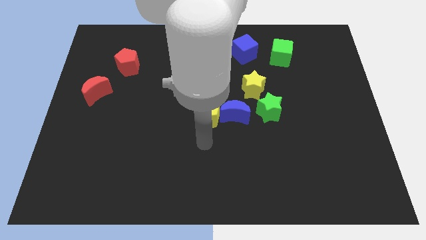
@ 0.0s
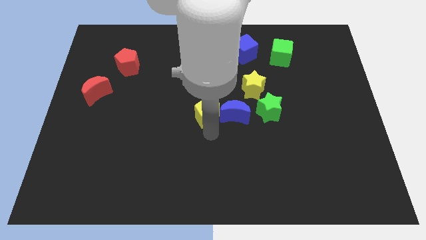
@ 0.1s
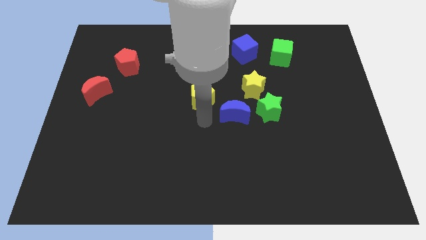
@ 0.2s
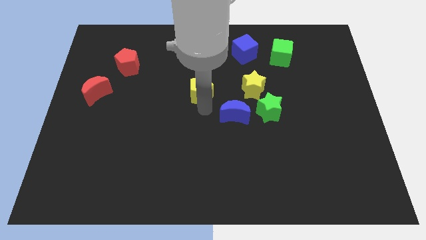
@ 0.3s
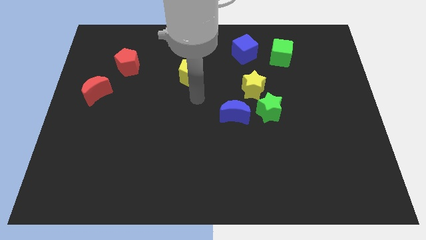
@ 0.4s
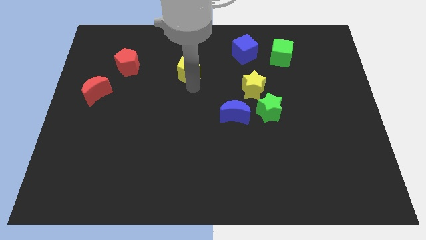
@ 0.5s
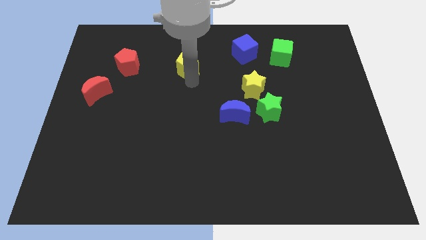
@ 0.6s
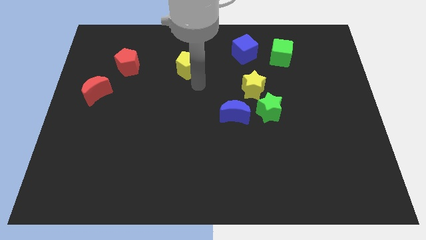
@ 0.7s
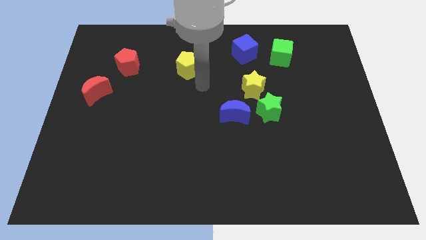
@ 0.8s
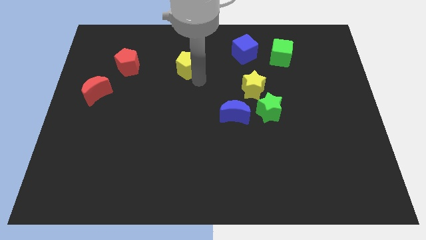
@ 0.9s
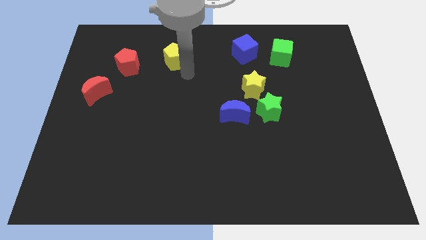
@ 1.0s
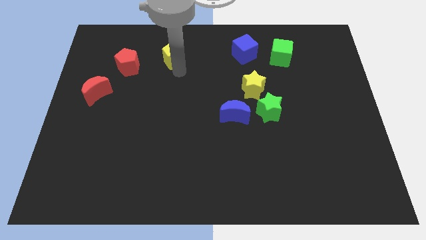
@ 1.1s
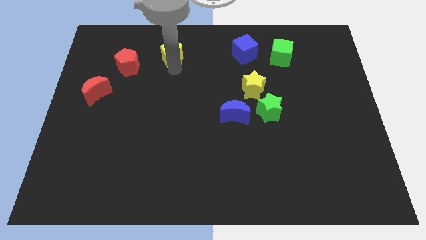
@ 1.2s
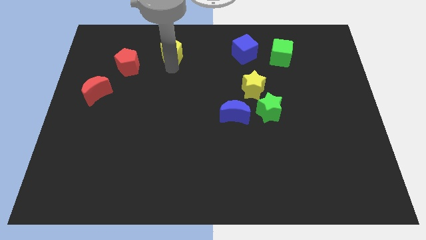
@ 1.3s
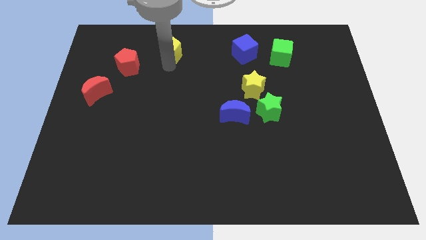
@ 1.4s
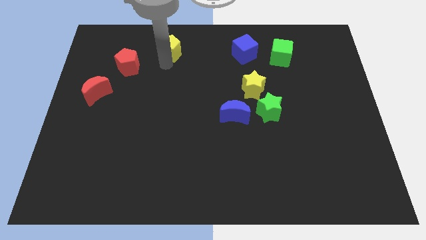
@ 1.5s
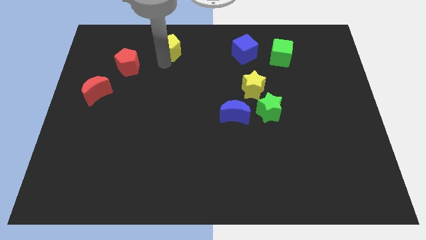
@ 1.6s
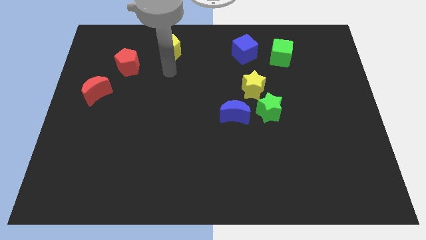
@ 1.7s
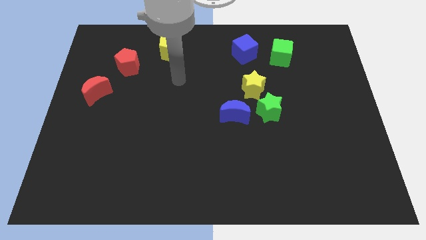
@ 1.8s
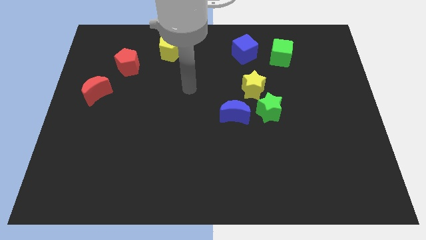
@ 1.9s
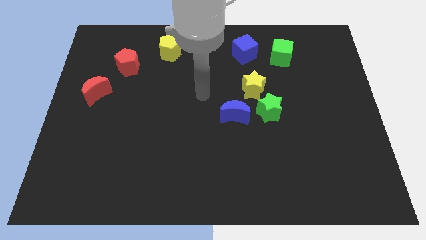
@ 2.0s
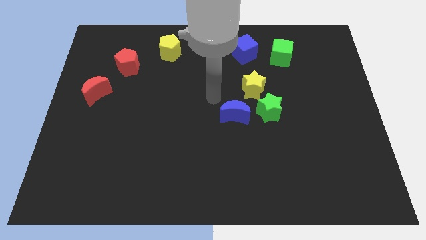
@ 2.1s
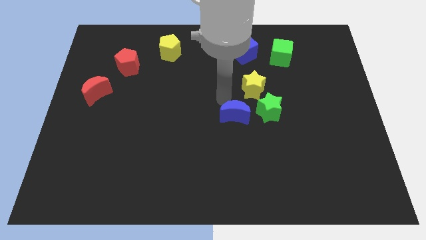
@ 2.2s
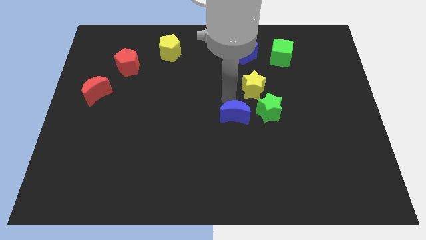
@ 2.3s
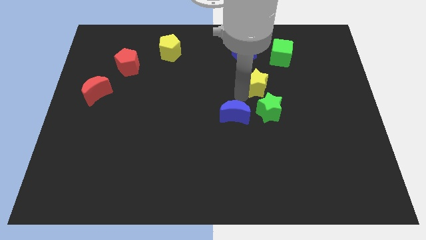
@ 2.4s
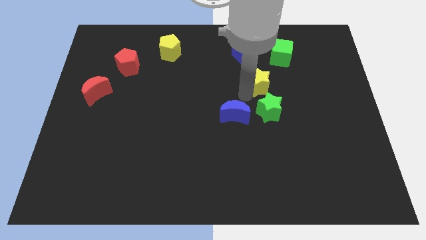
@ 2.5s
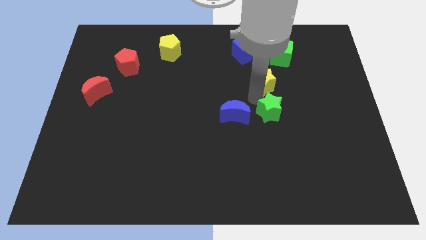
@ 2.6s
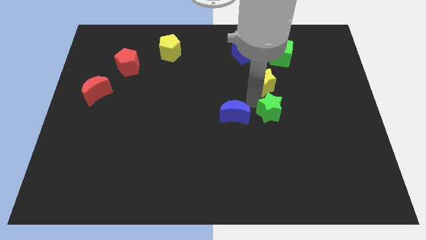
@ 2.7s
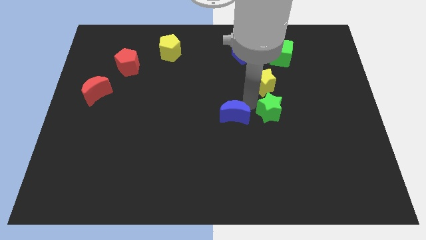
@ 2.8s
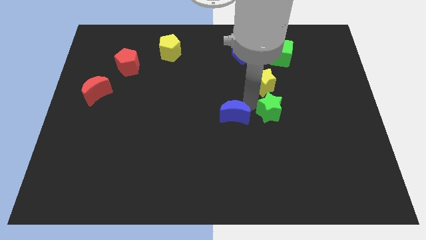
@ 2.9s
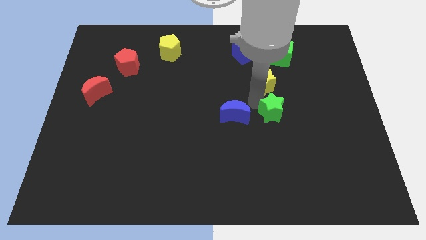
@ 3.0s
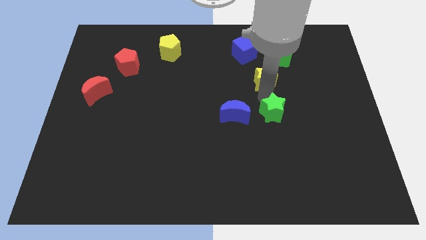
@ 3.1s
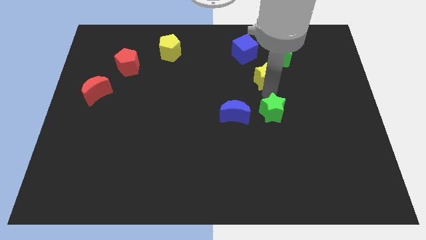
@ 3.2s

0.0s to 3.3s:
push the yellow pentagon and yellow star towards the top side

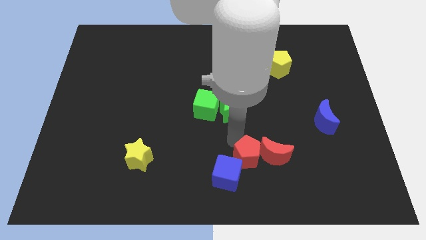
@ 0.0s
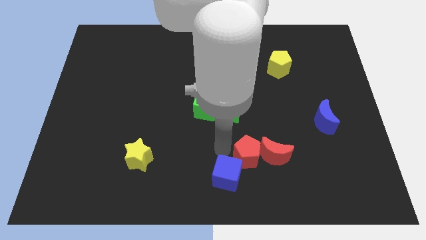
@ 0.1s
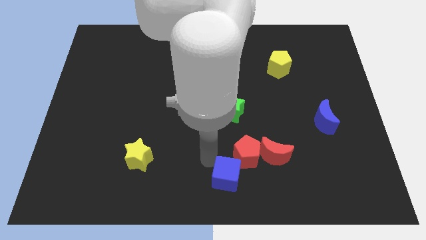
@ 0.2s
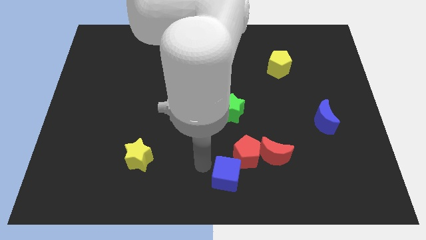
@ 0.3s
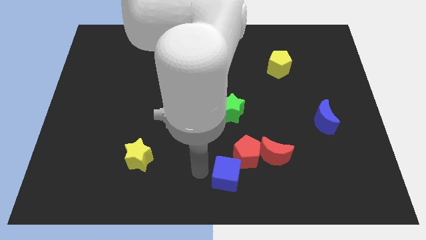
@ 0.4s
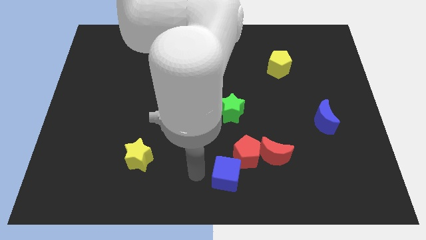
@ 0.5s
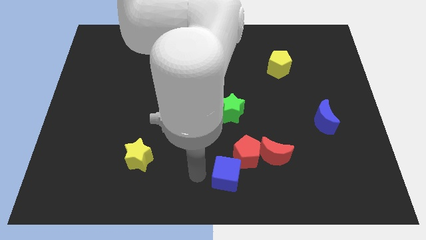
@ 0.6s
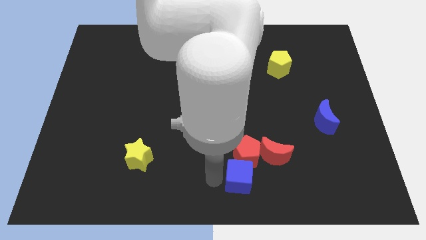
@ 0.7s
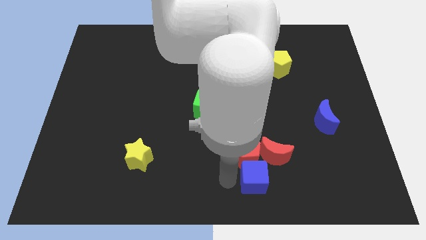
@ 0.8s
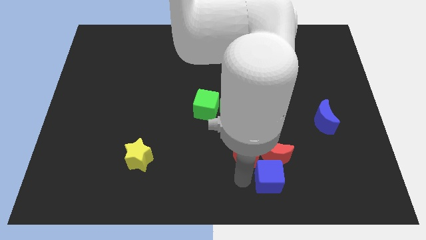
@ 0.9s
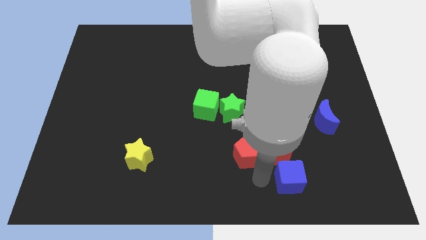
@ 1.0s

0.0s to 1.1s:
slide blue cube below the red moon

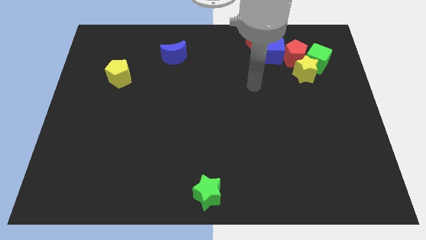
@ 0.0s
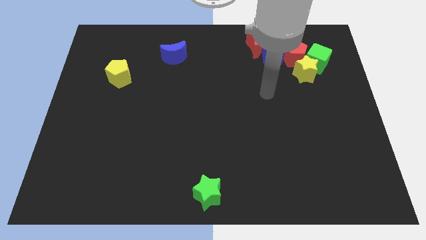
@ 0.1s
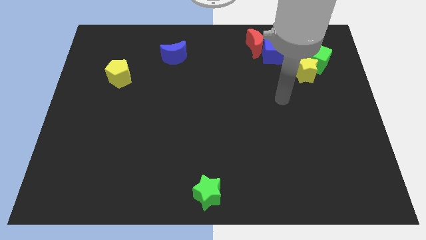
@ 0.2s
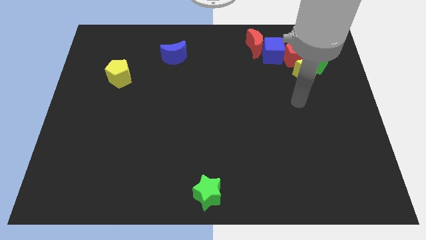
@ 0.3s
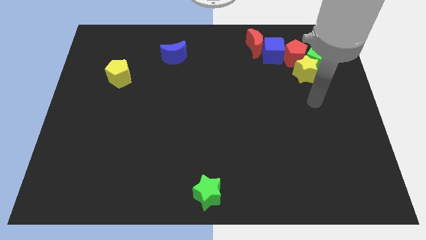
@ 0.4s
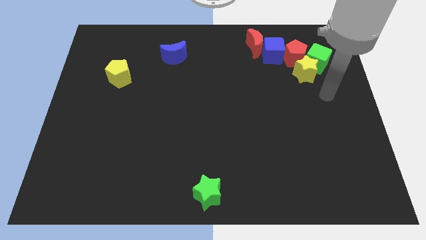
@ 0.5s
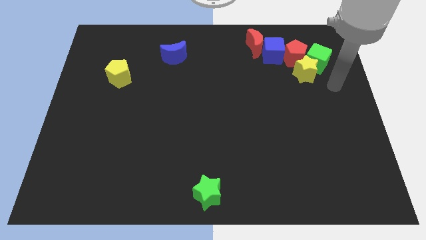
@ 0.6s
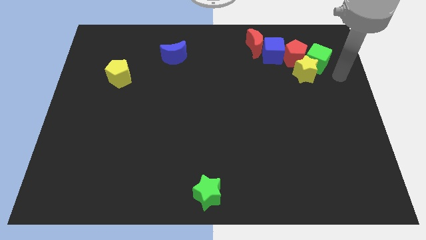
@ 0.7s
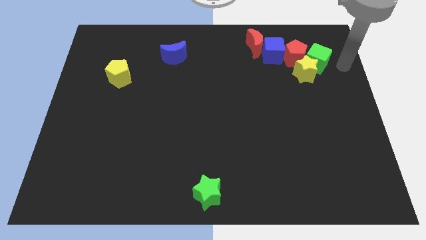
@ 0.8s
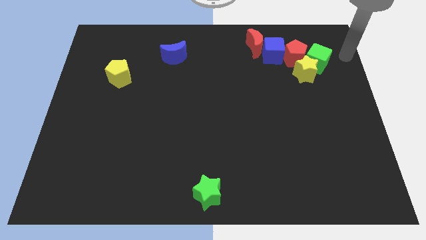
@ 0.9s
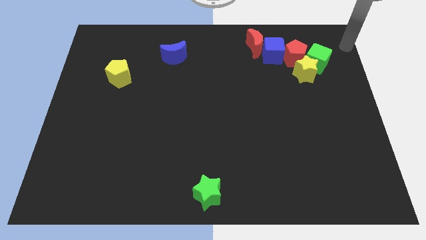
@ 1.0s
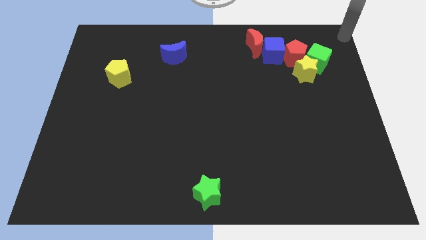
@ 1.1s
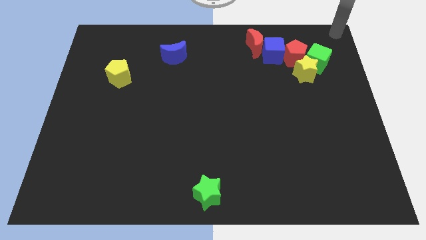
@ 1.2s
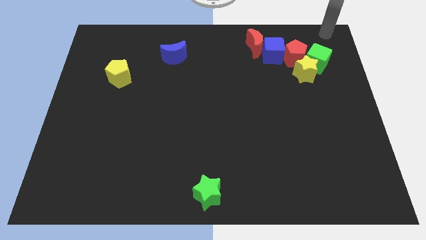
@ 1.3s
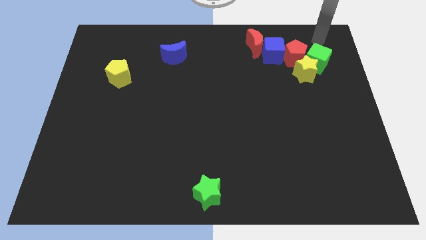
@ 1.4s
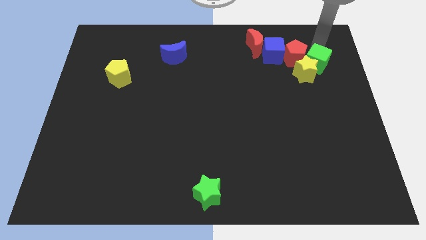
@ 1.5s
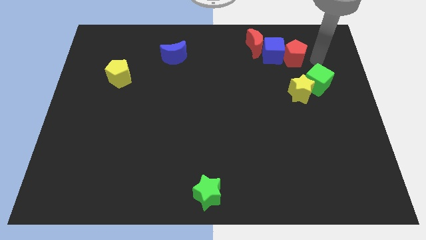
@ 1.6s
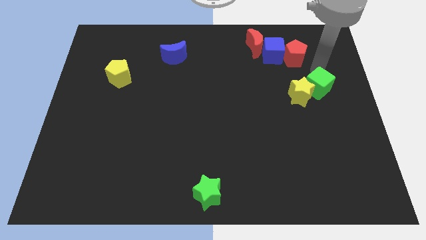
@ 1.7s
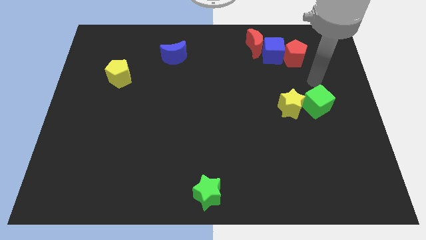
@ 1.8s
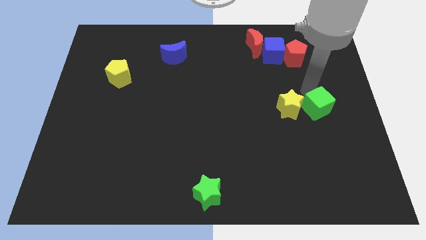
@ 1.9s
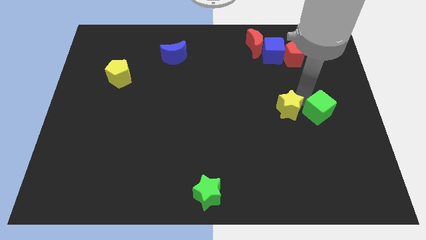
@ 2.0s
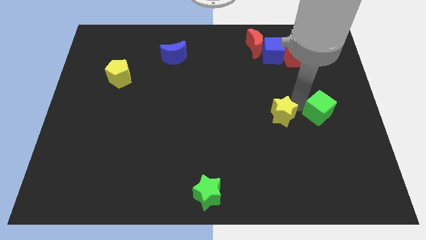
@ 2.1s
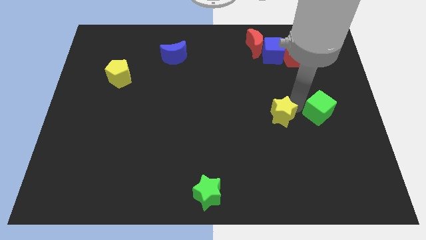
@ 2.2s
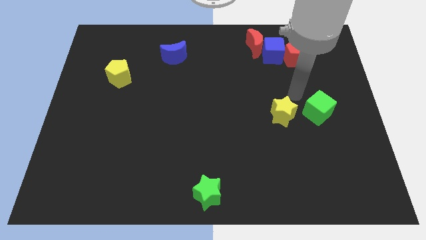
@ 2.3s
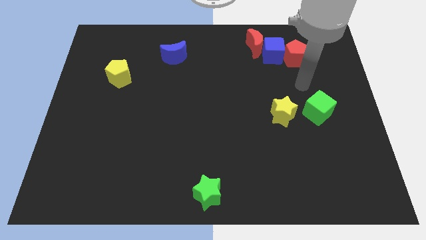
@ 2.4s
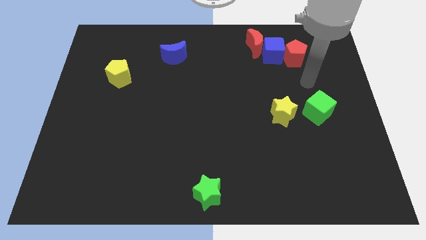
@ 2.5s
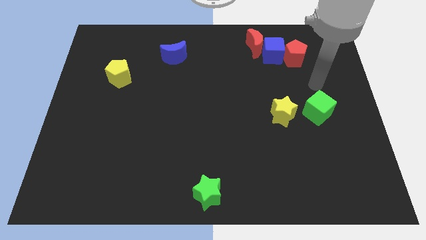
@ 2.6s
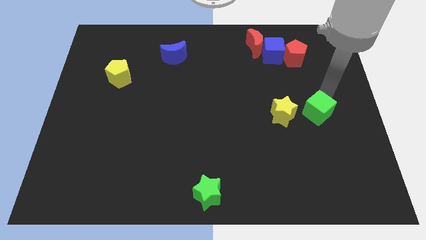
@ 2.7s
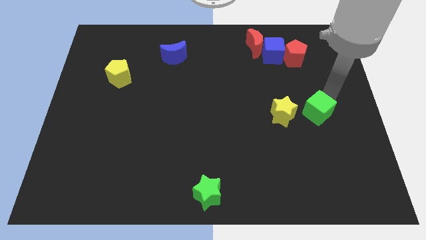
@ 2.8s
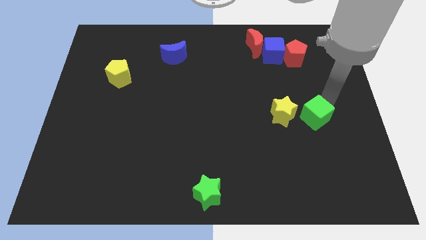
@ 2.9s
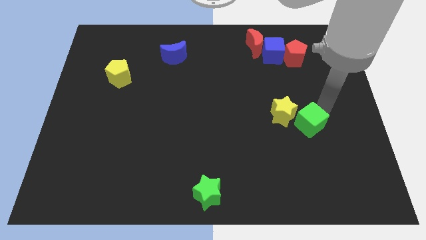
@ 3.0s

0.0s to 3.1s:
move the green cube right to the yellow star

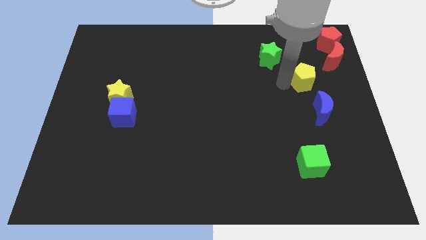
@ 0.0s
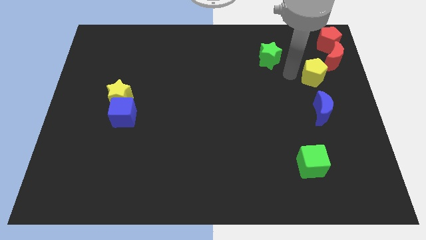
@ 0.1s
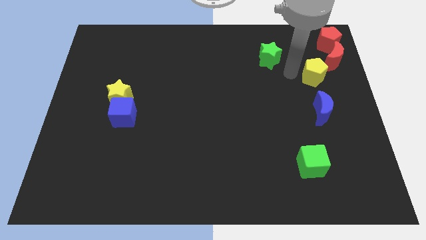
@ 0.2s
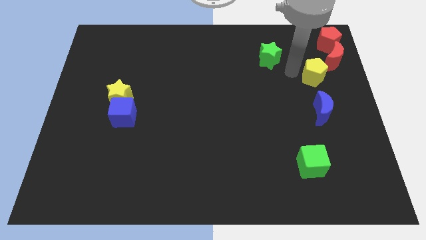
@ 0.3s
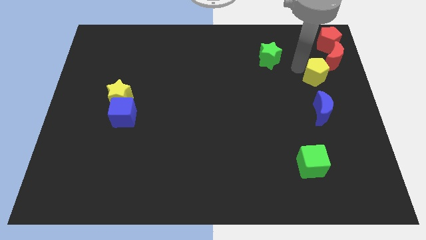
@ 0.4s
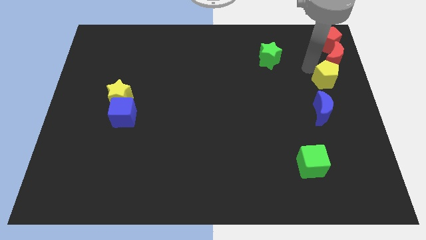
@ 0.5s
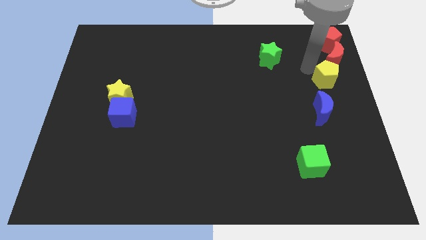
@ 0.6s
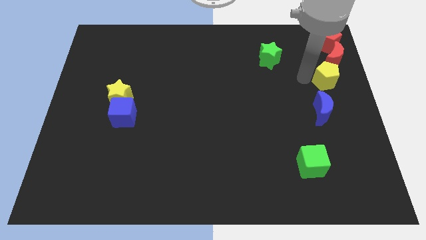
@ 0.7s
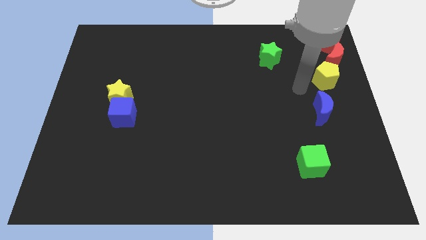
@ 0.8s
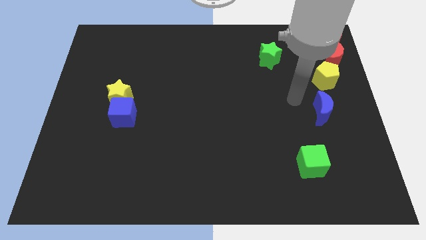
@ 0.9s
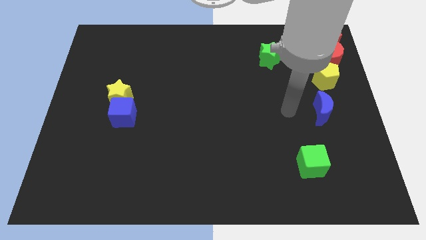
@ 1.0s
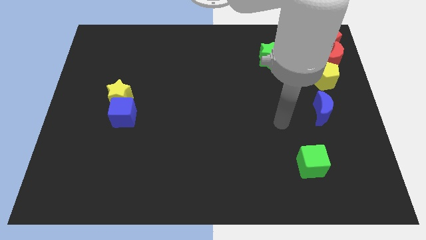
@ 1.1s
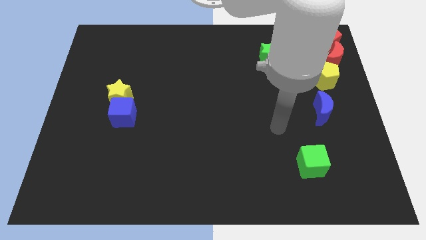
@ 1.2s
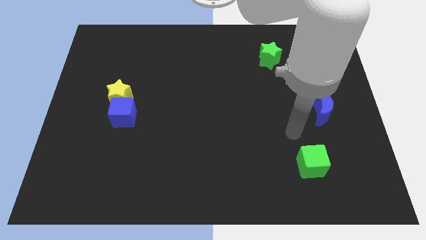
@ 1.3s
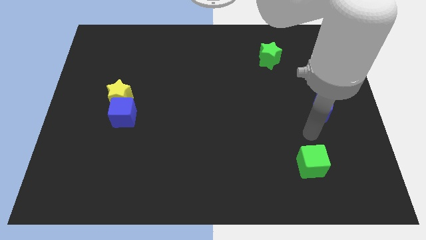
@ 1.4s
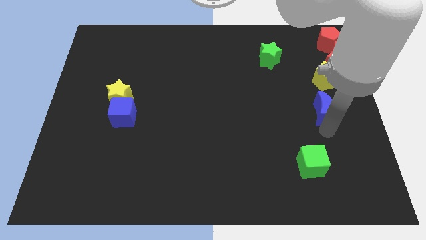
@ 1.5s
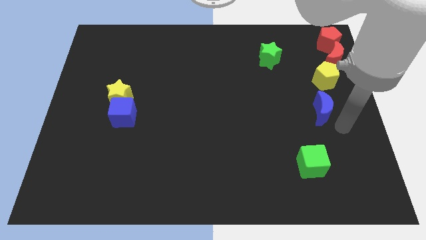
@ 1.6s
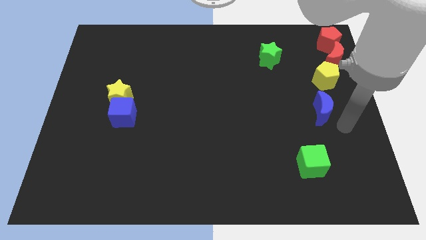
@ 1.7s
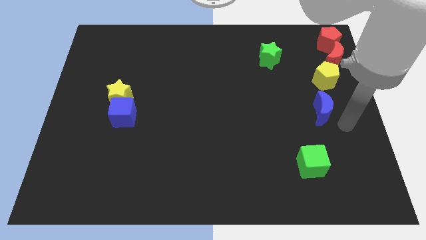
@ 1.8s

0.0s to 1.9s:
place the yellow pentagon between the blue cube and red moon
